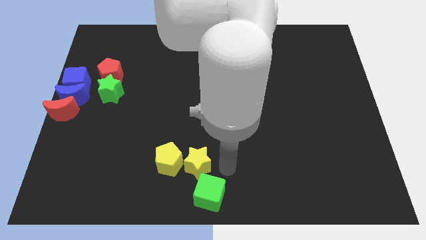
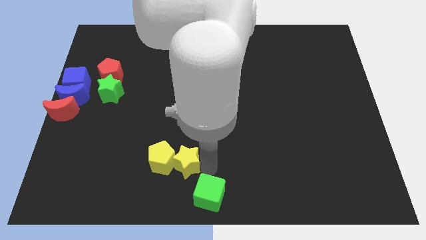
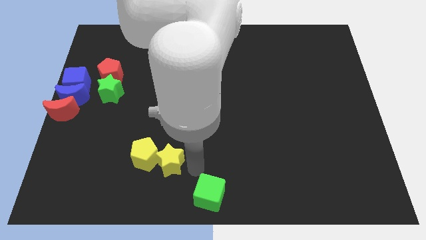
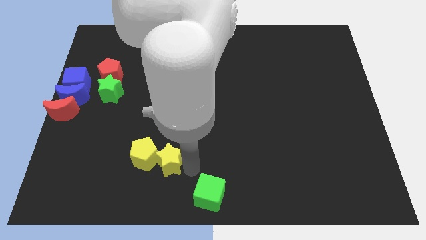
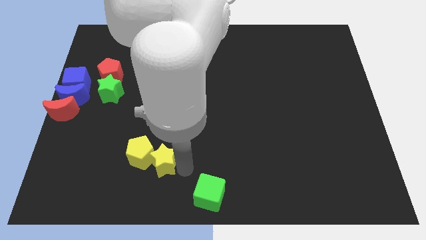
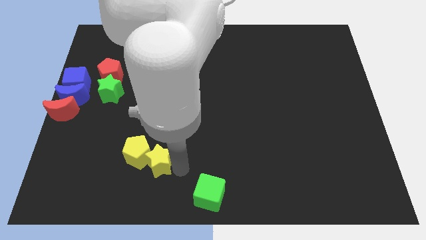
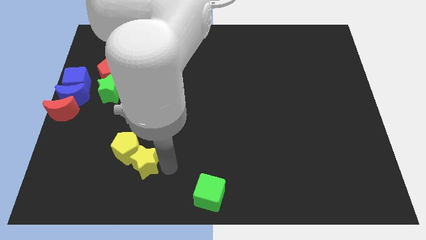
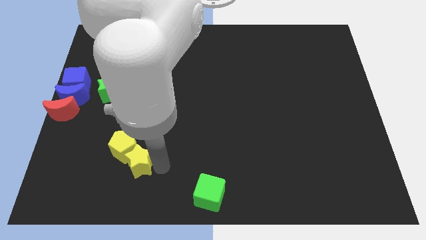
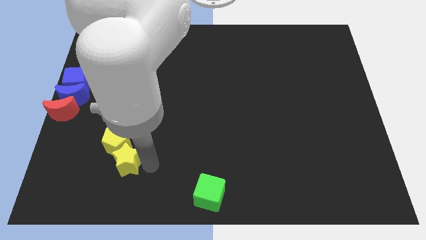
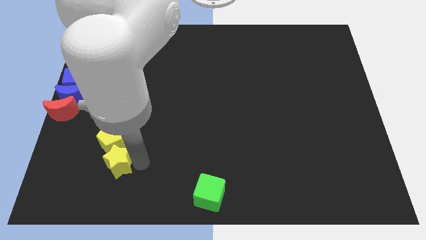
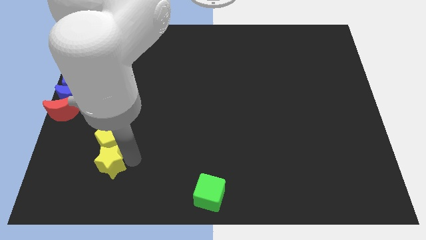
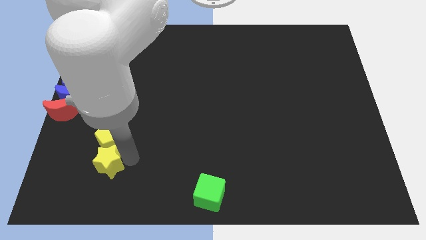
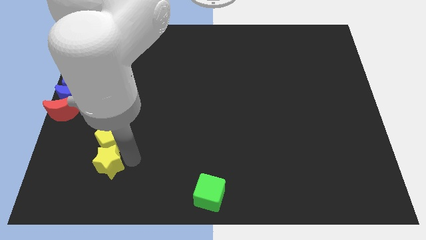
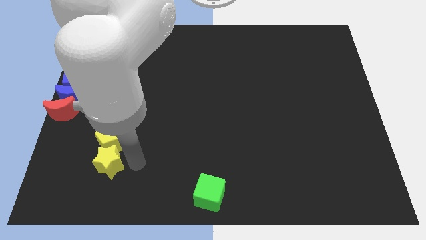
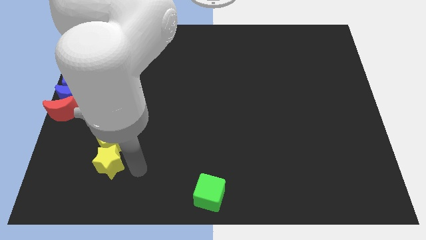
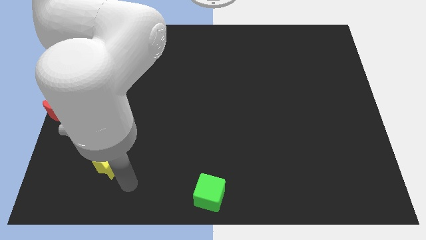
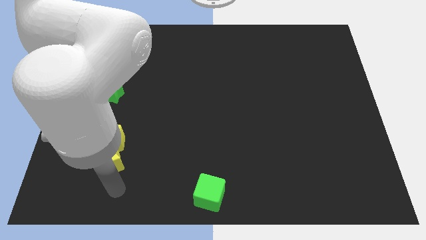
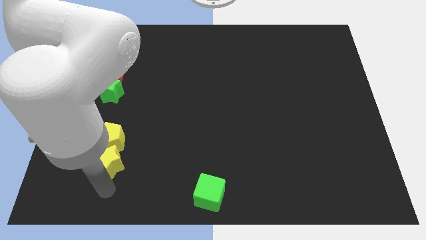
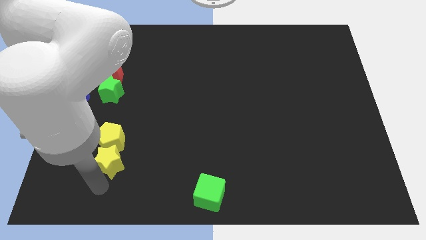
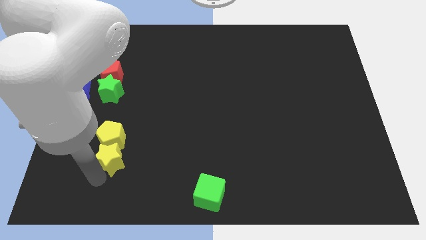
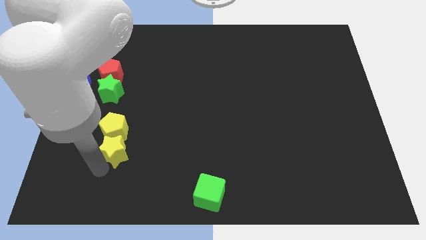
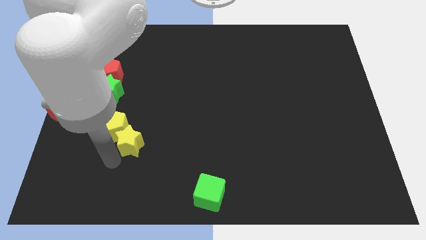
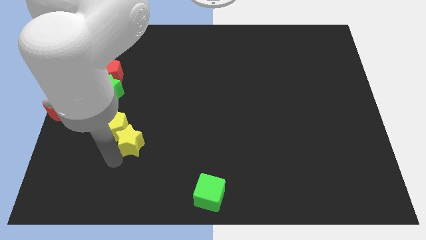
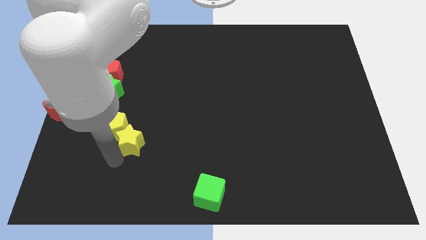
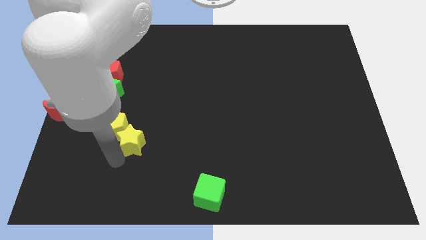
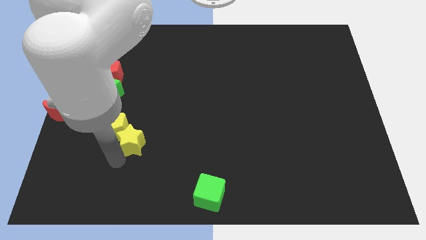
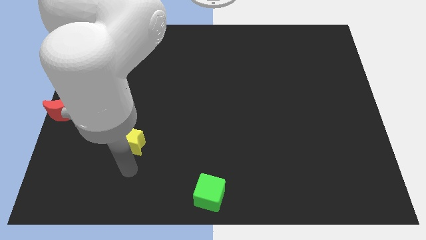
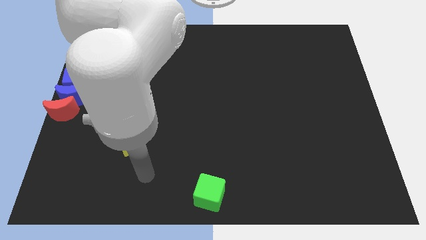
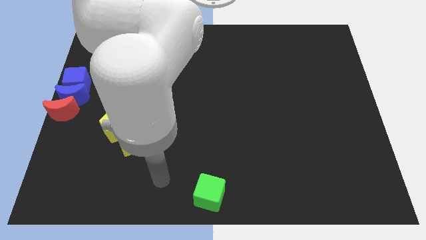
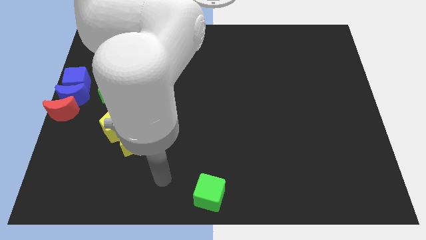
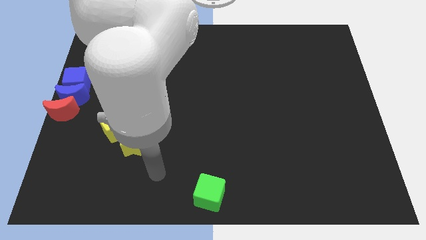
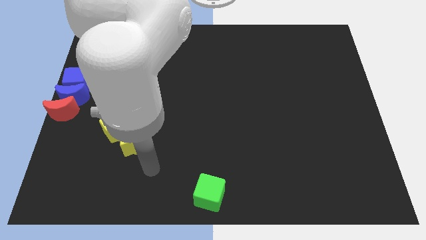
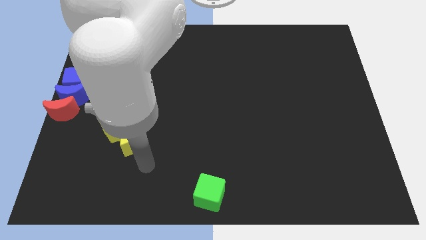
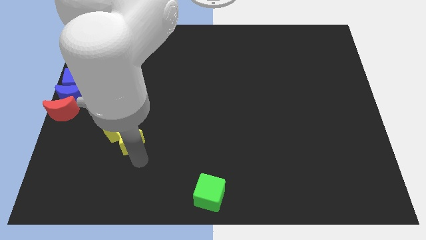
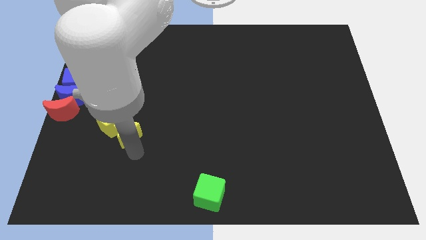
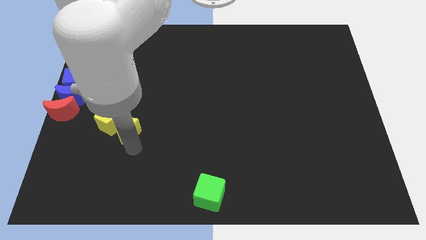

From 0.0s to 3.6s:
push the yellow star into the yellow pentagon

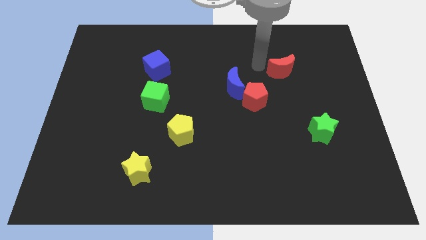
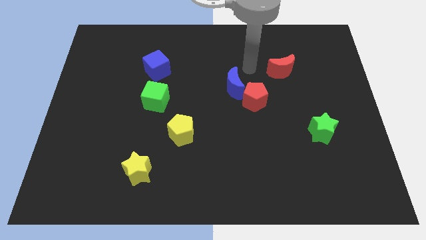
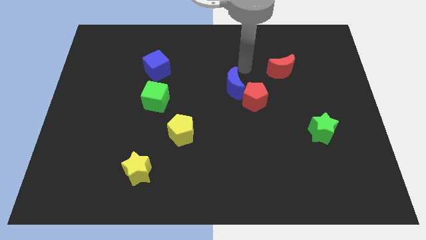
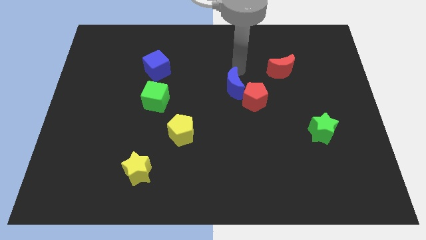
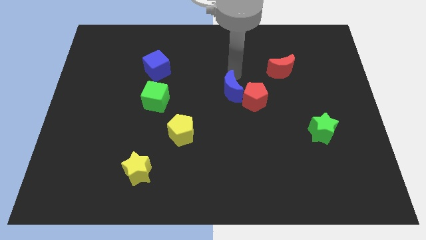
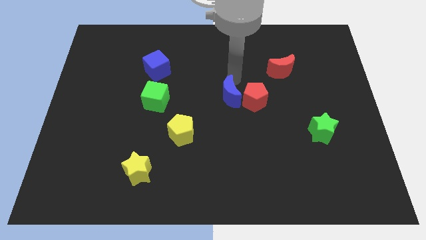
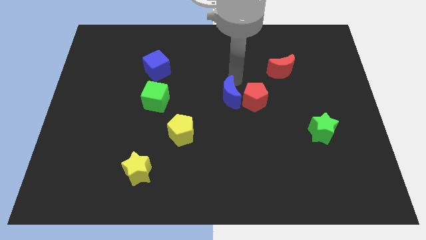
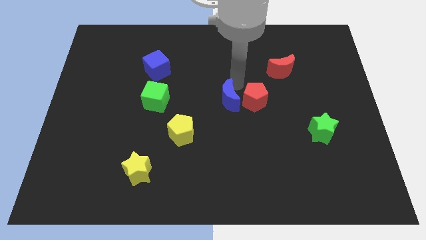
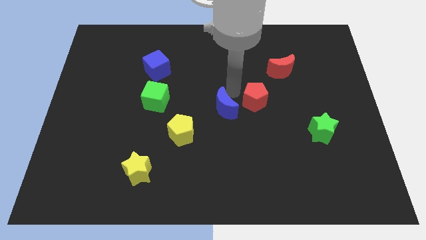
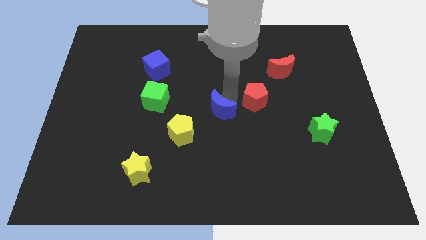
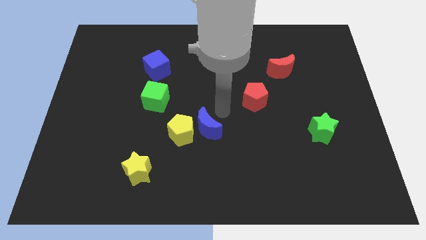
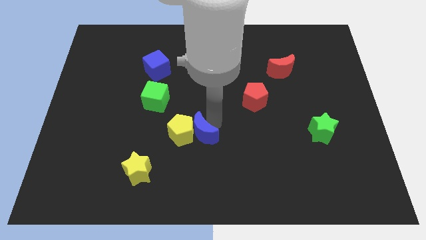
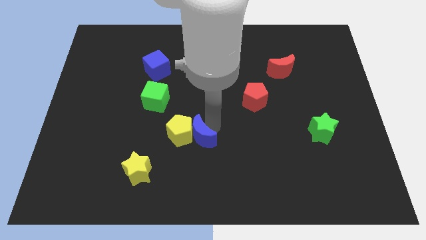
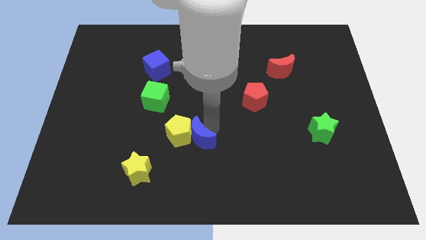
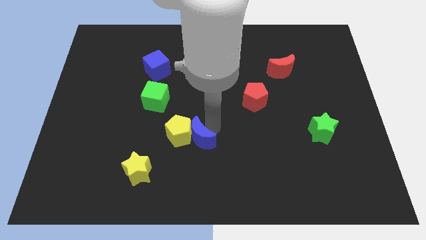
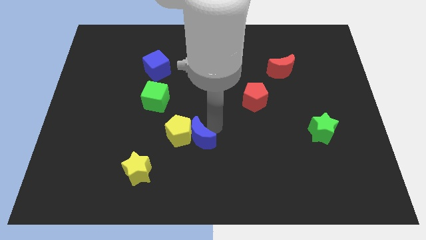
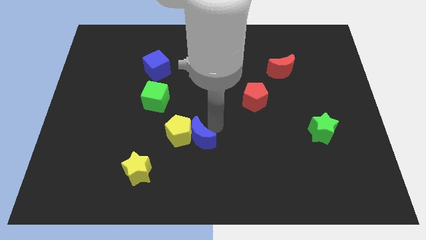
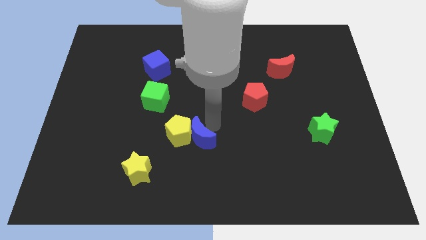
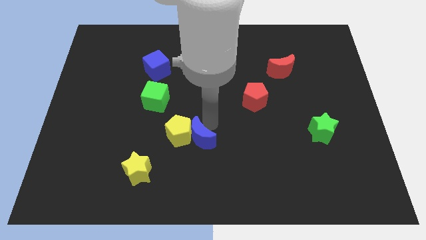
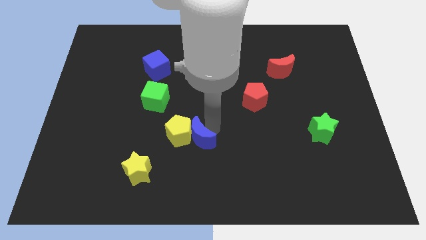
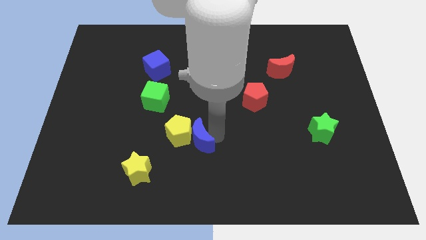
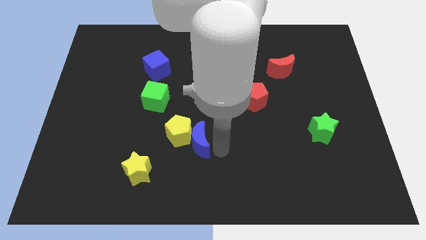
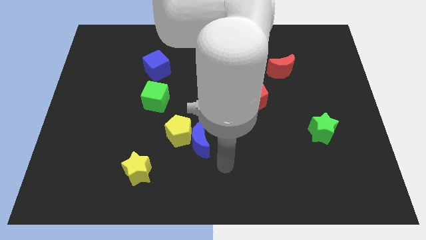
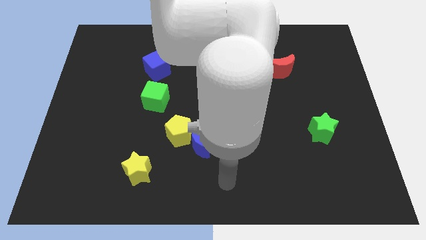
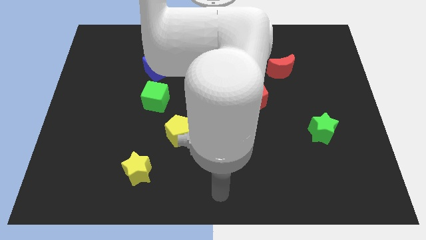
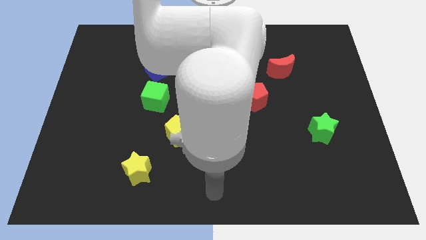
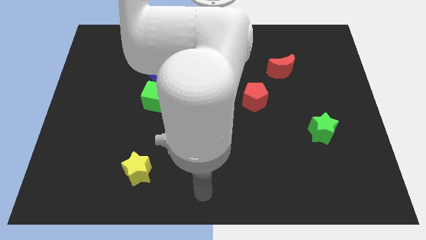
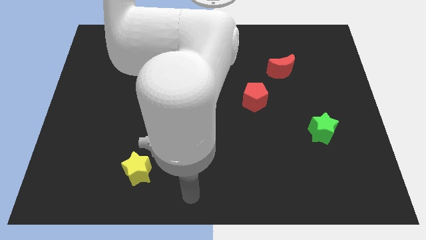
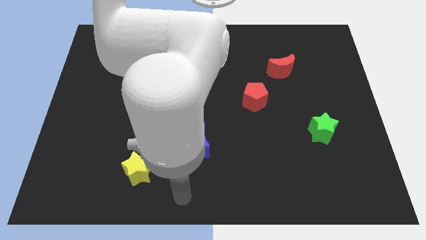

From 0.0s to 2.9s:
push the blue moon into the yellow pentagon

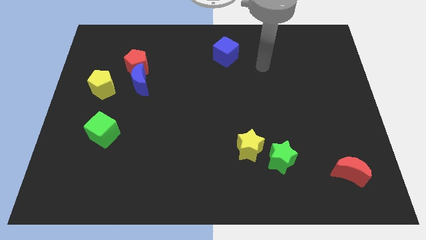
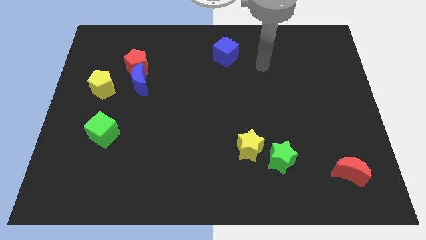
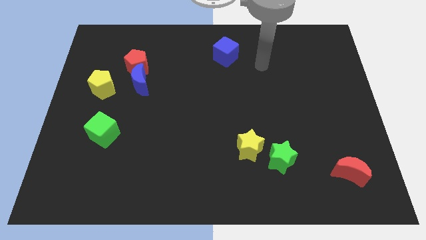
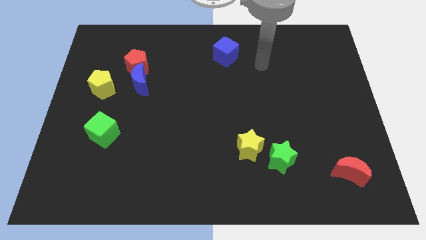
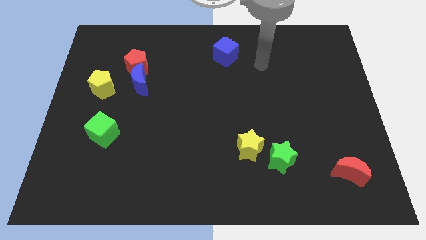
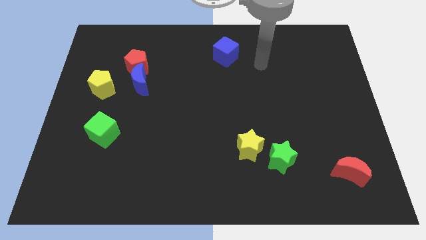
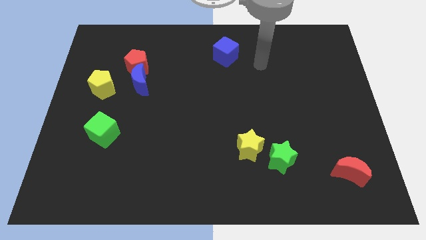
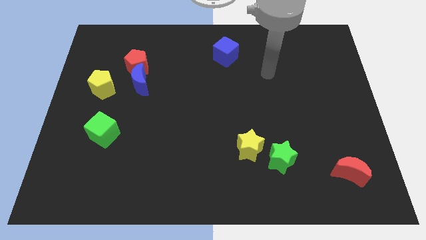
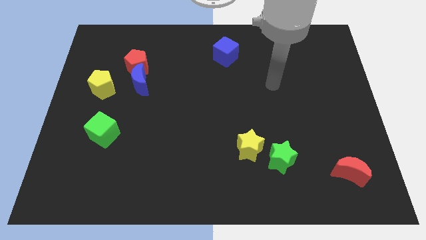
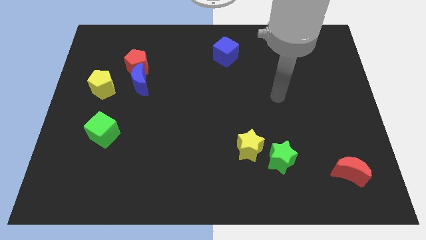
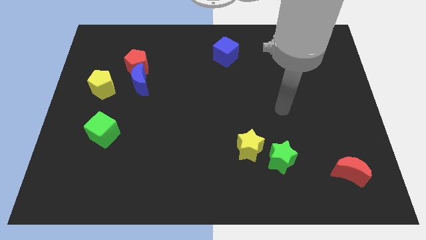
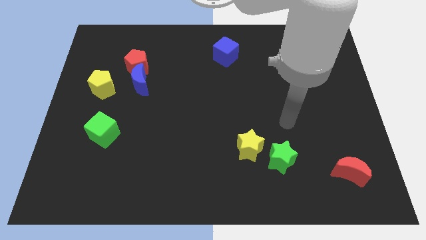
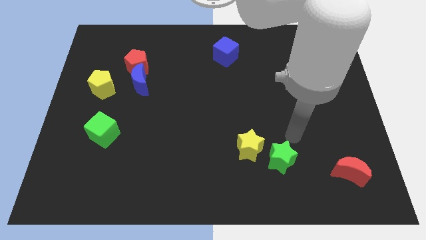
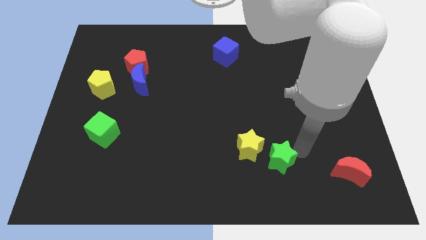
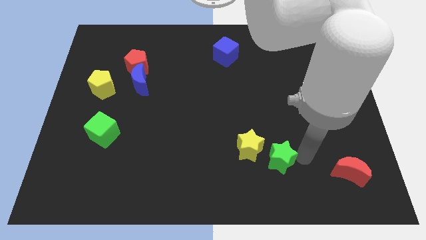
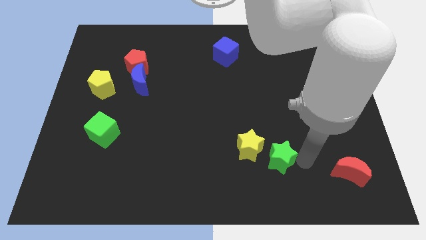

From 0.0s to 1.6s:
push the arm beside green star

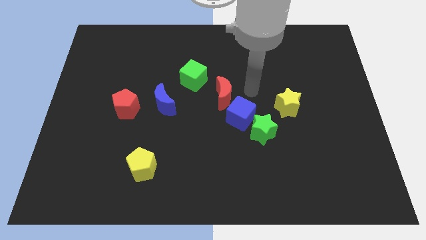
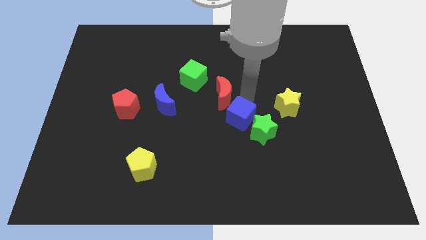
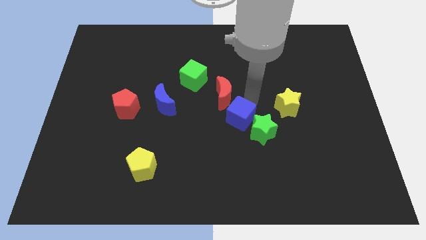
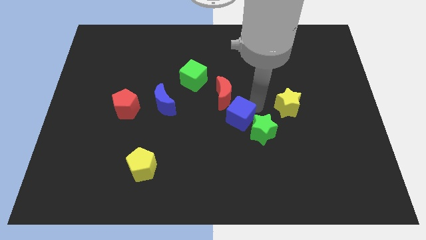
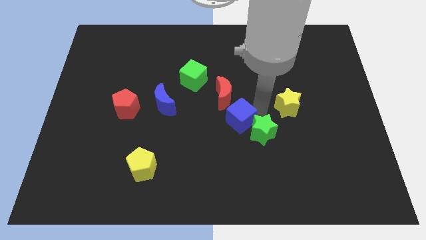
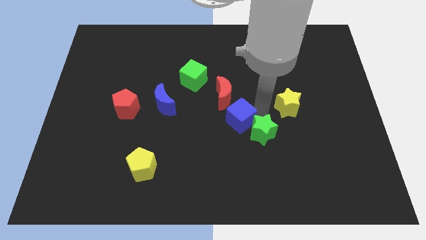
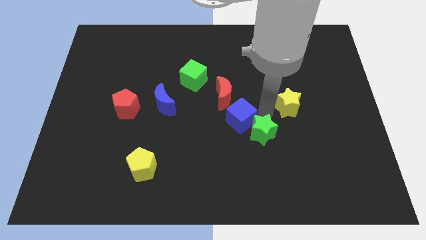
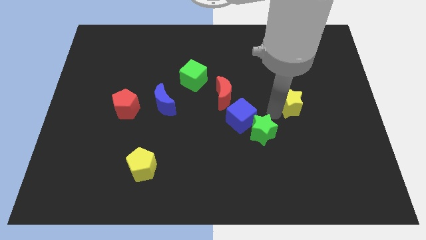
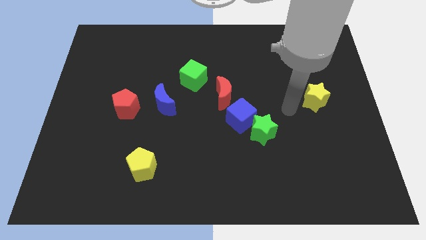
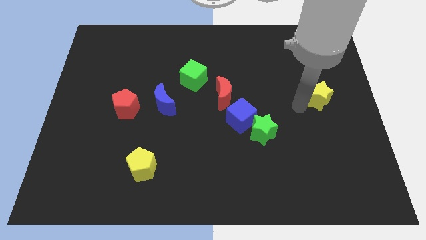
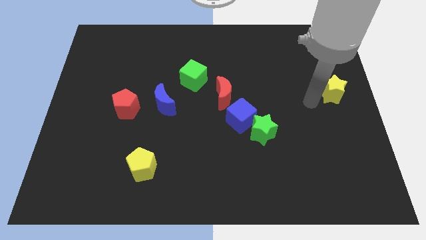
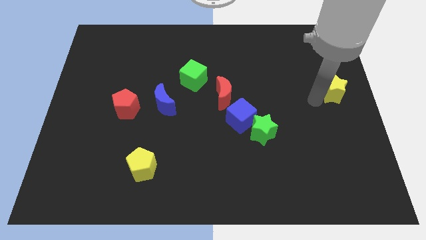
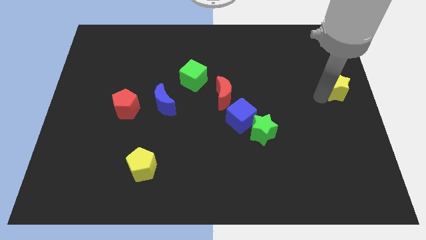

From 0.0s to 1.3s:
move yellow star slightly right
